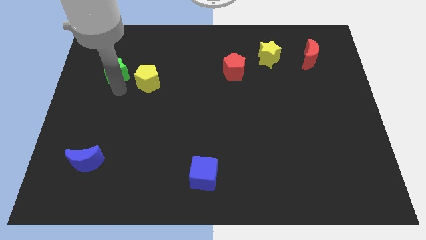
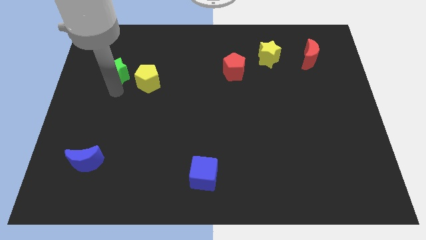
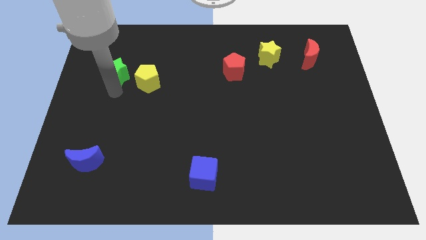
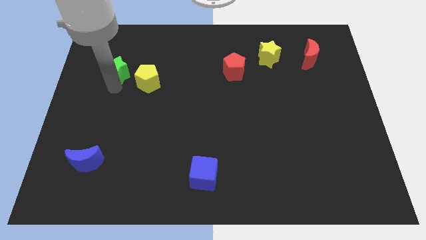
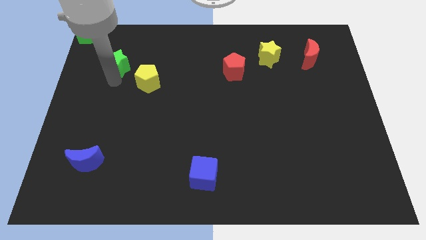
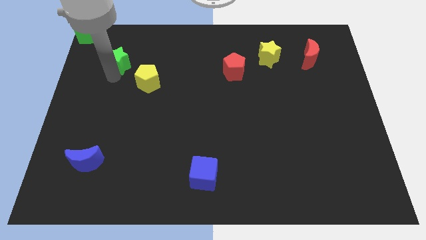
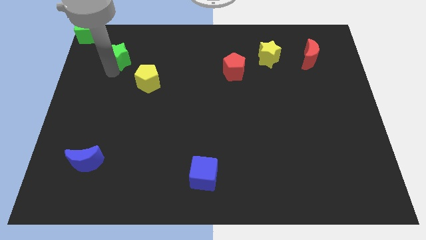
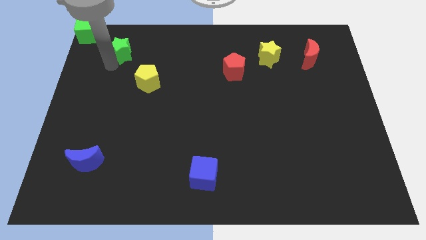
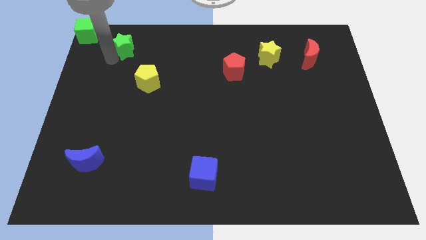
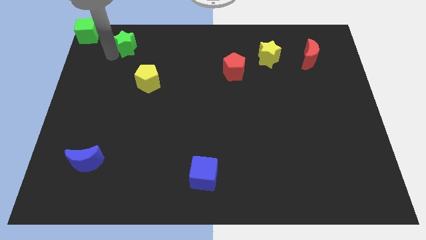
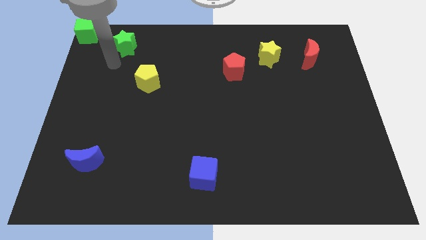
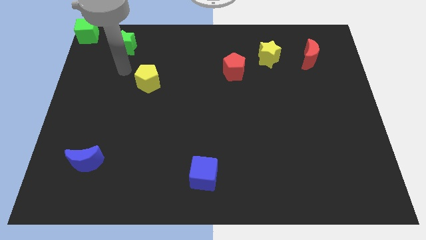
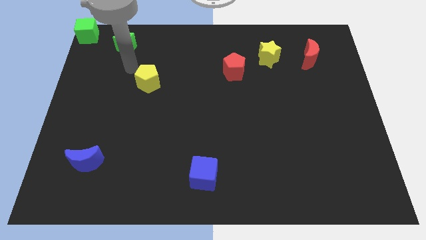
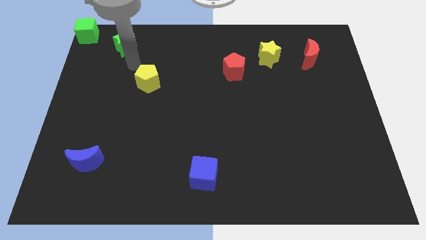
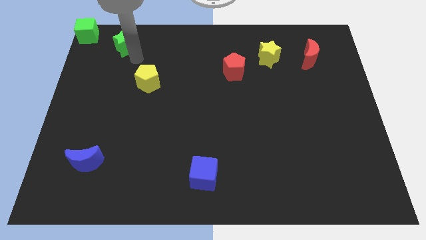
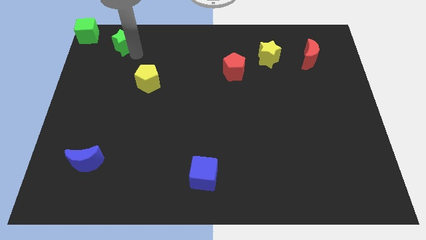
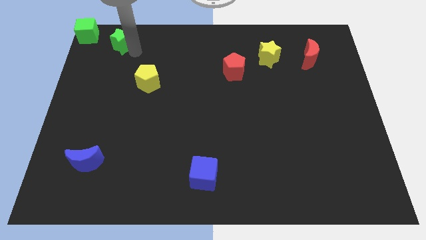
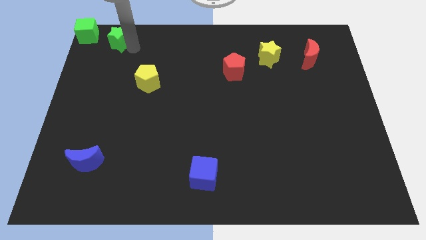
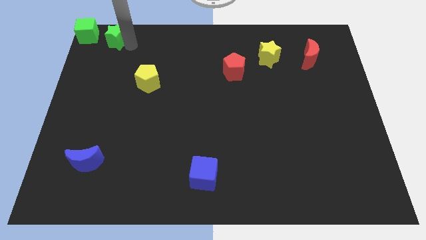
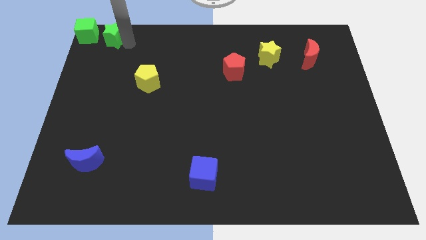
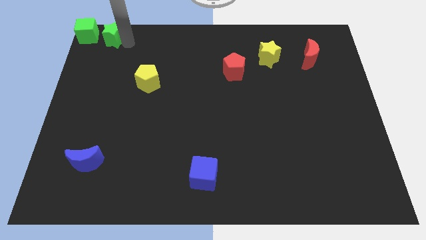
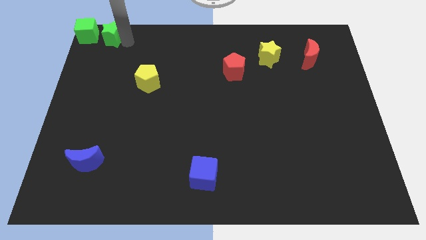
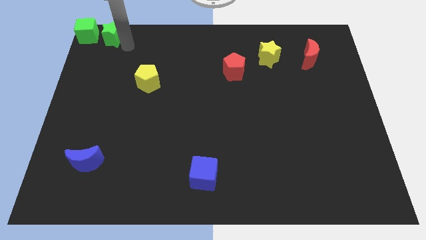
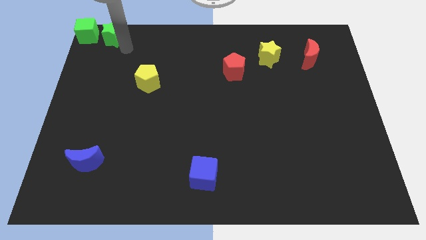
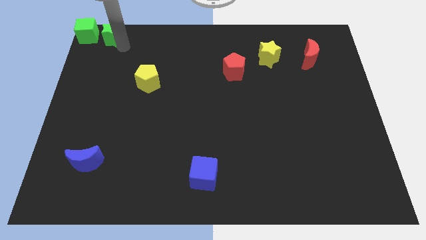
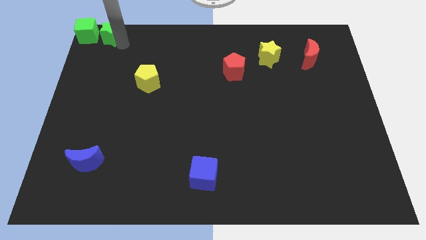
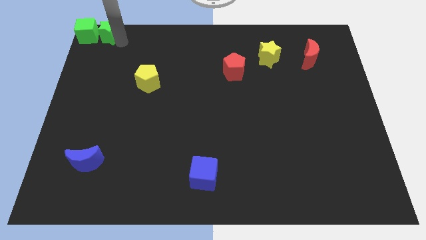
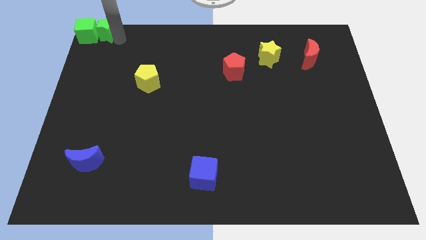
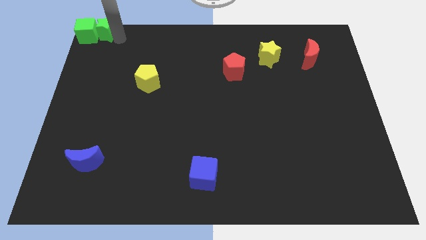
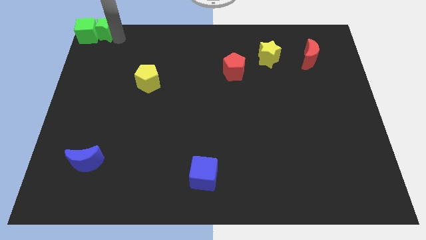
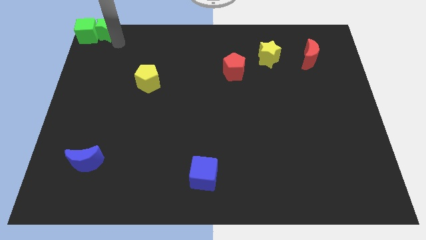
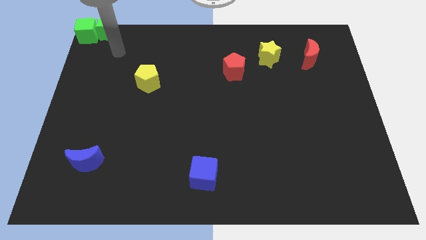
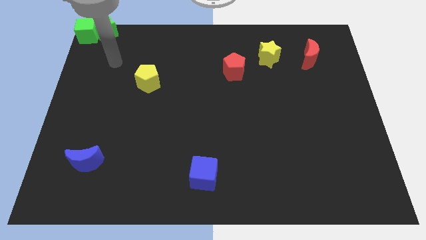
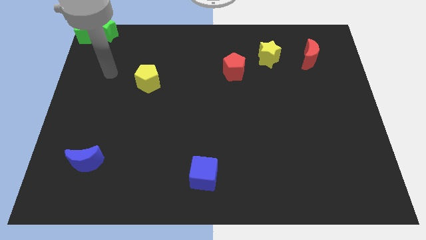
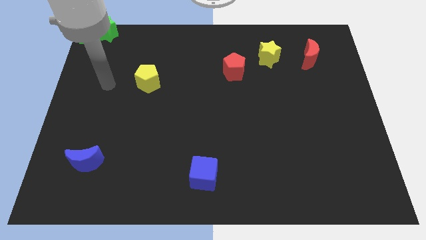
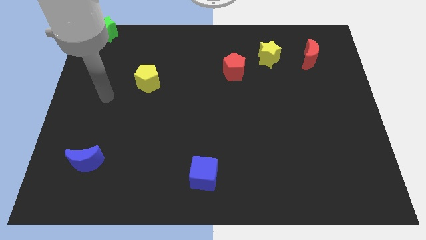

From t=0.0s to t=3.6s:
move the green star to the right side of the green cube

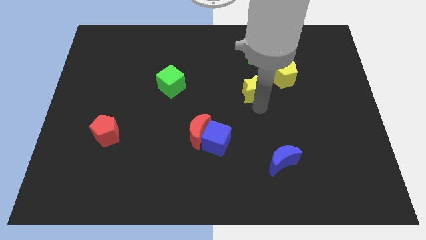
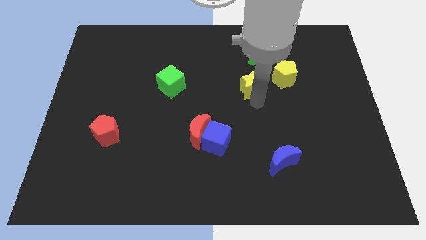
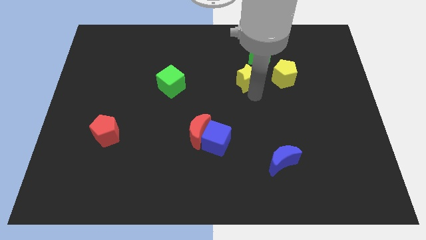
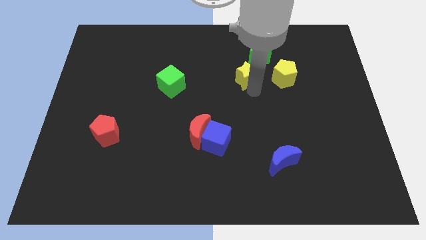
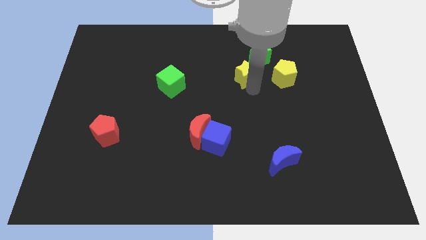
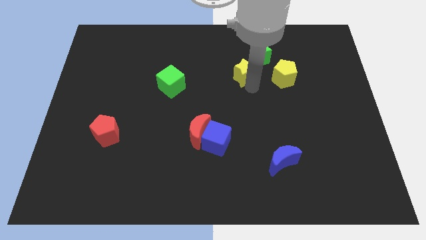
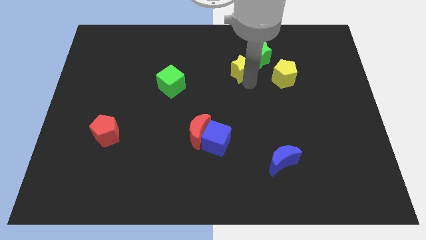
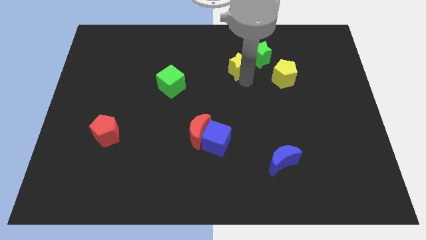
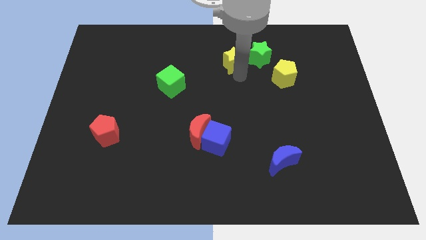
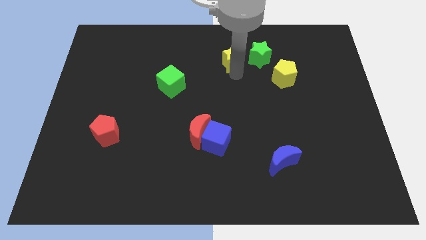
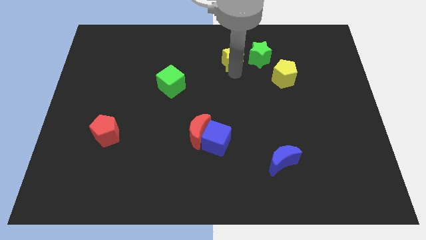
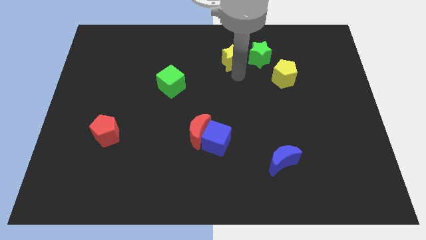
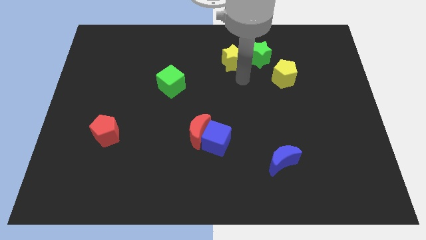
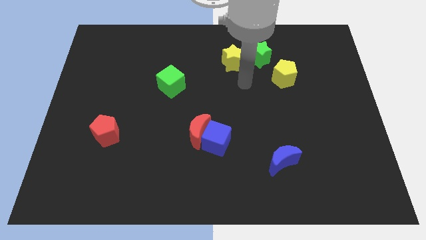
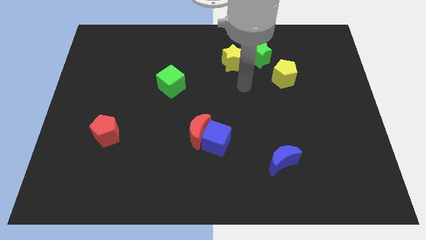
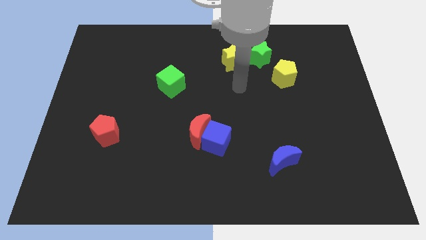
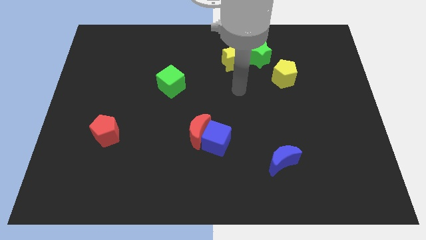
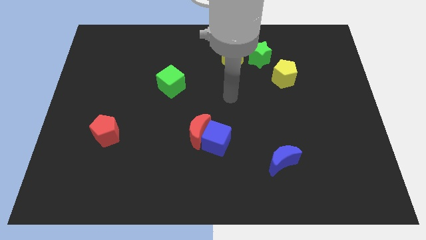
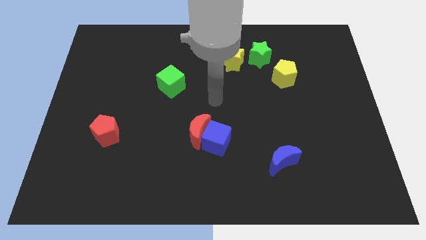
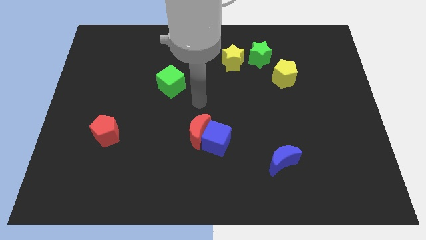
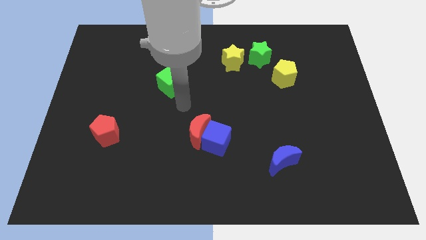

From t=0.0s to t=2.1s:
move the yellow star left to the green star

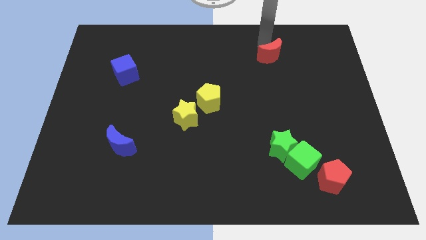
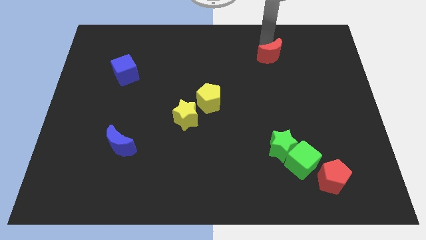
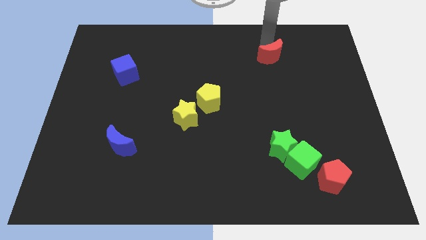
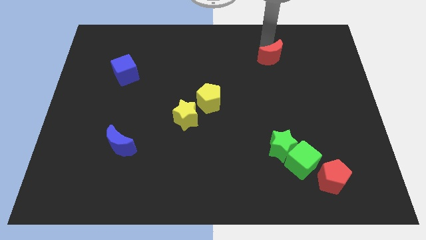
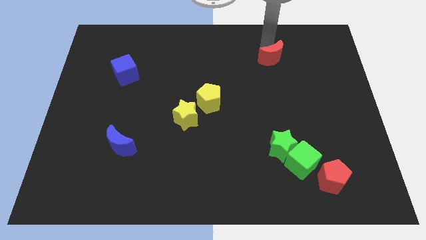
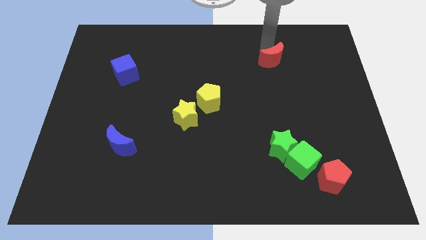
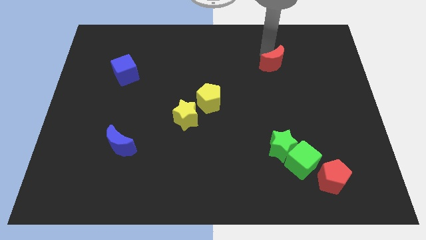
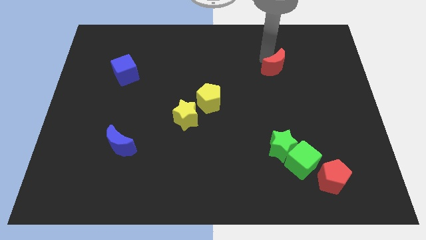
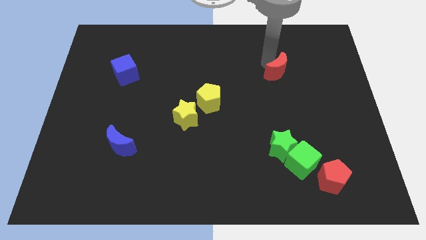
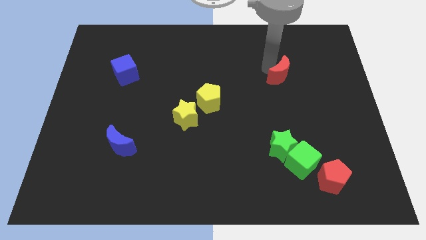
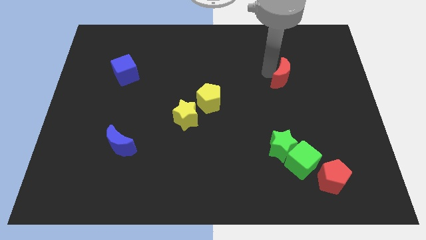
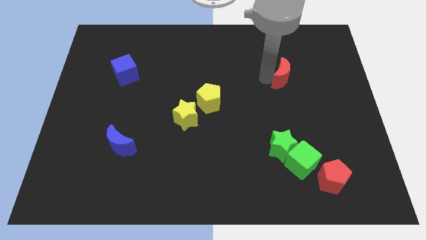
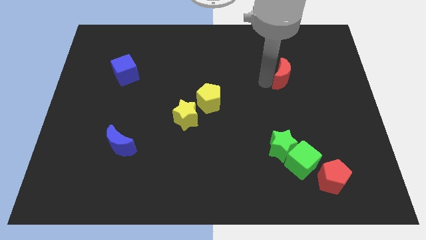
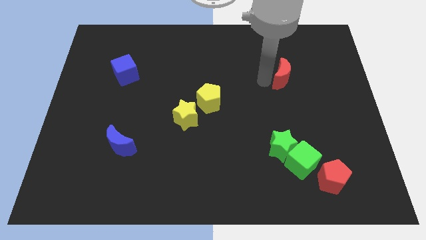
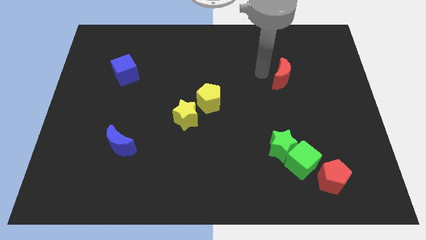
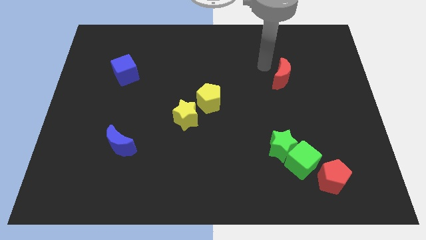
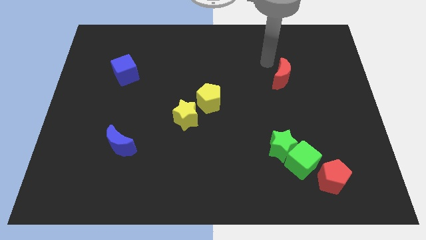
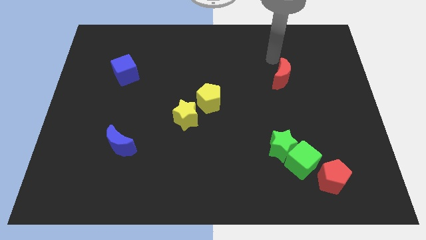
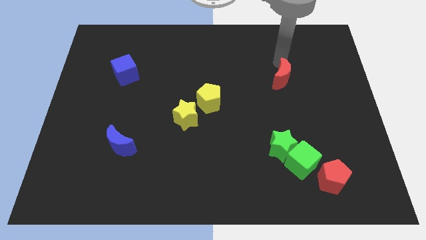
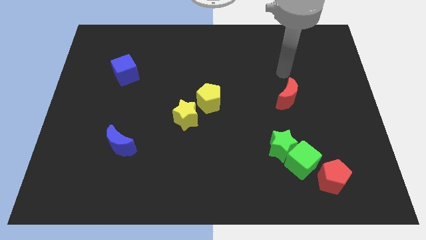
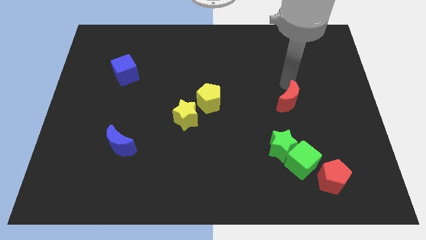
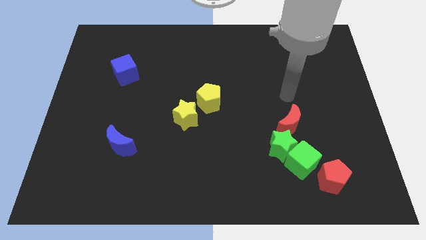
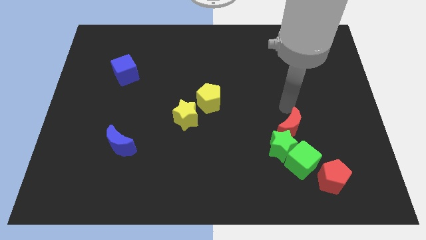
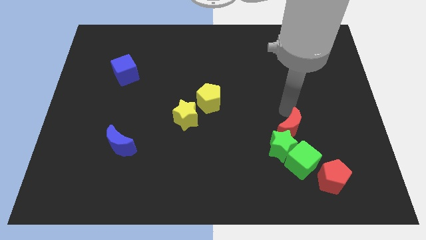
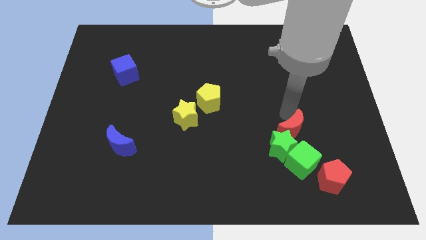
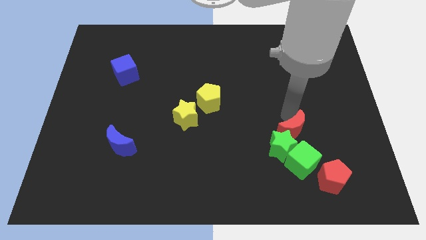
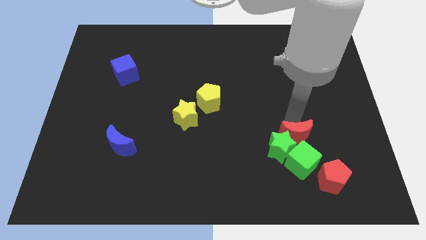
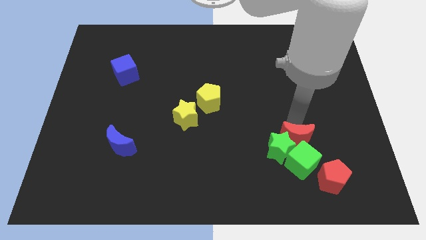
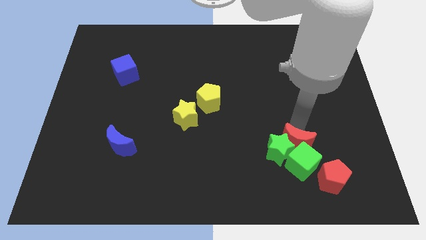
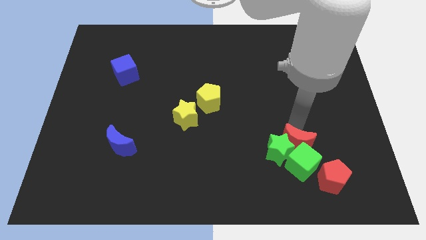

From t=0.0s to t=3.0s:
push the red crescent into green blocks

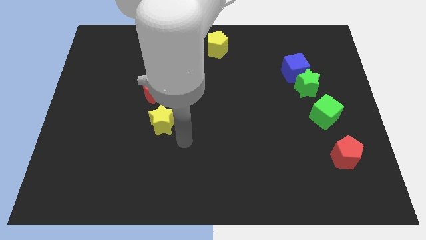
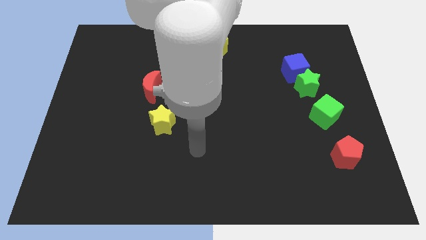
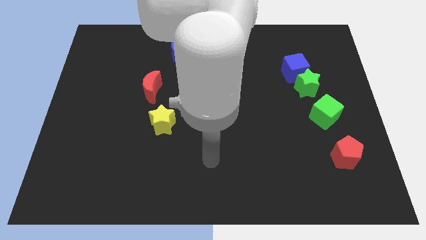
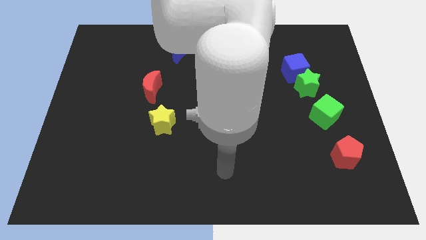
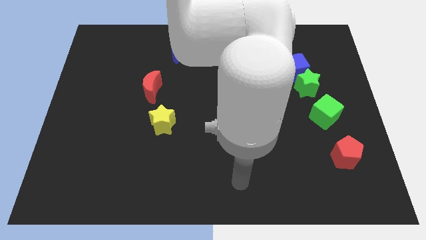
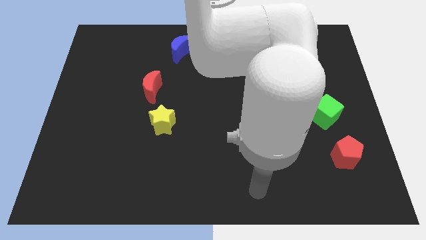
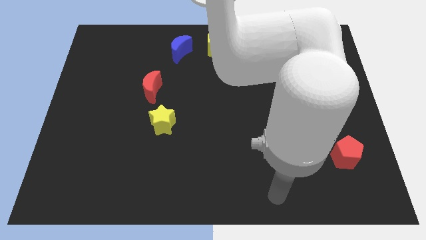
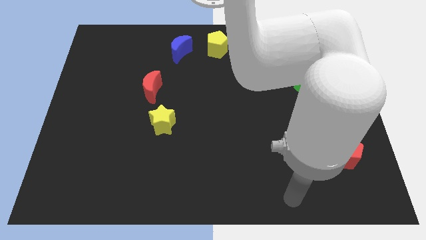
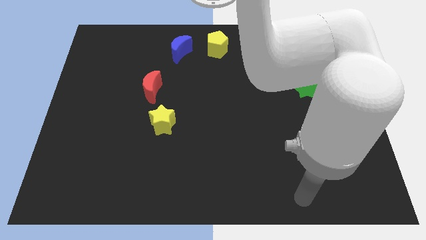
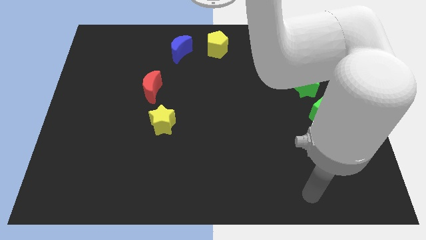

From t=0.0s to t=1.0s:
move your arm away from yellow star
